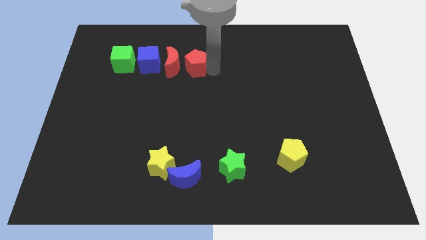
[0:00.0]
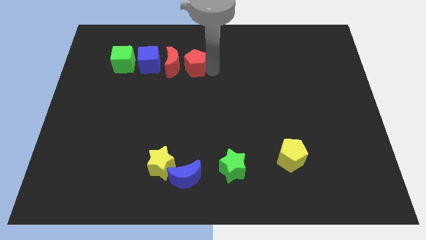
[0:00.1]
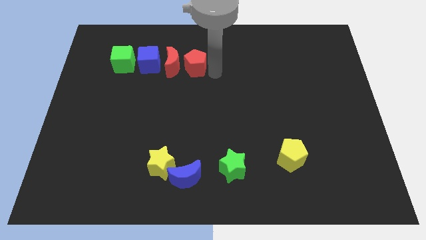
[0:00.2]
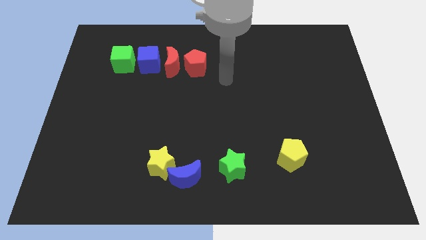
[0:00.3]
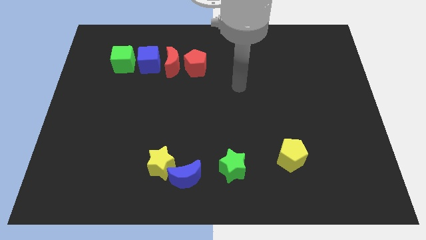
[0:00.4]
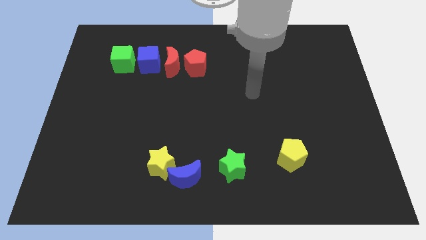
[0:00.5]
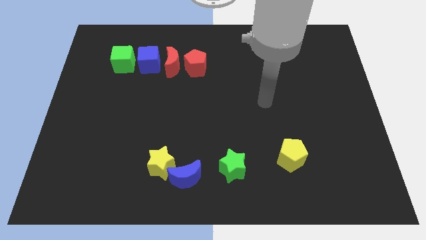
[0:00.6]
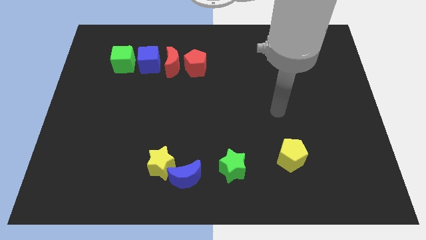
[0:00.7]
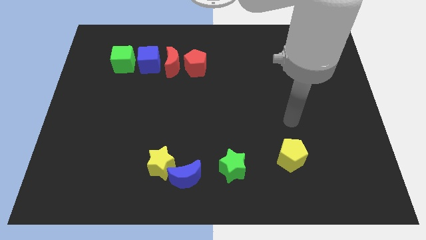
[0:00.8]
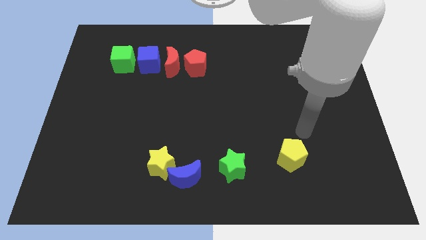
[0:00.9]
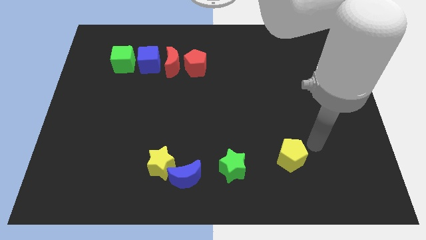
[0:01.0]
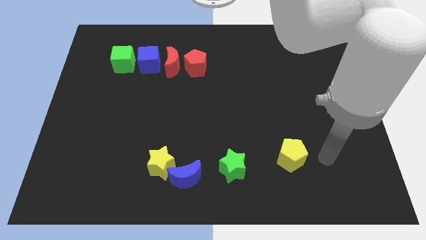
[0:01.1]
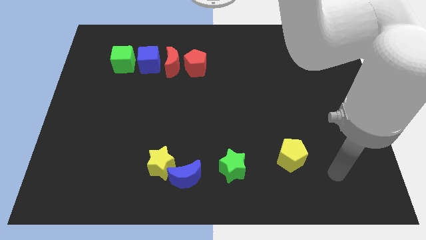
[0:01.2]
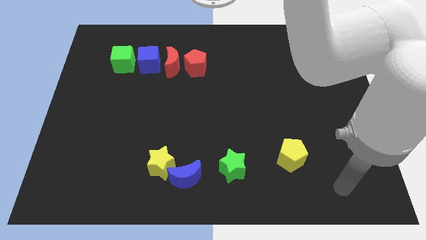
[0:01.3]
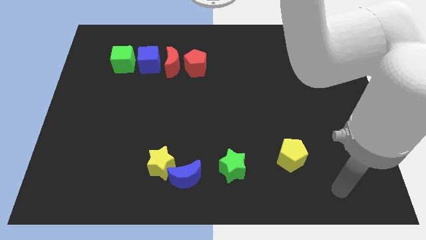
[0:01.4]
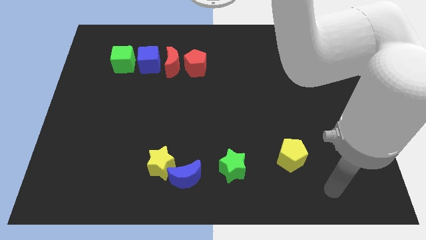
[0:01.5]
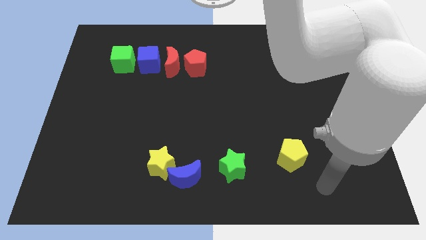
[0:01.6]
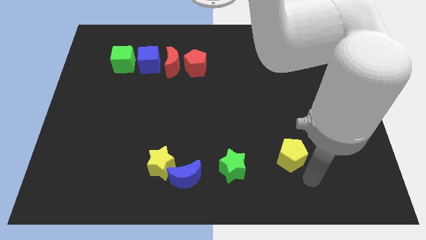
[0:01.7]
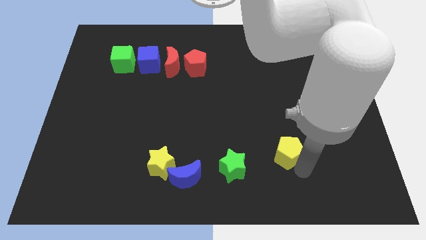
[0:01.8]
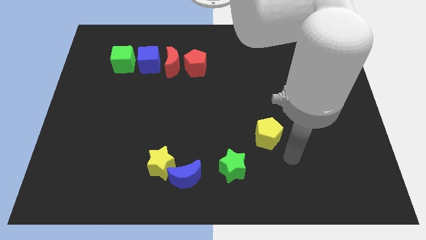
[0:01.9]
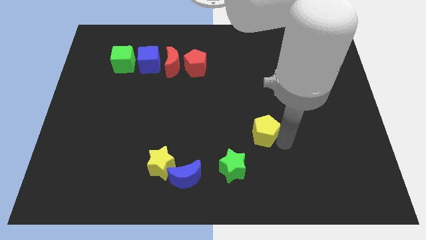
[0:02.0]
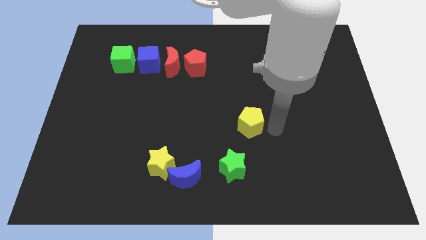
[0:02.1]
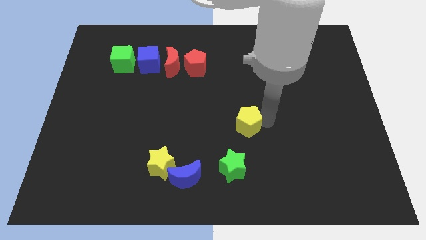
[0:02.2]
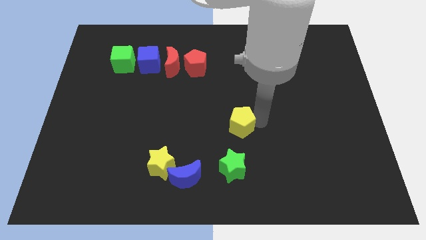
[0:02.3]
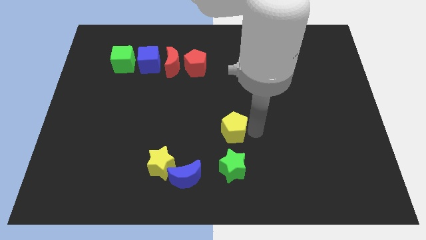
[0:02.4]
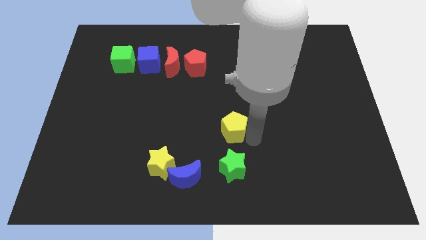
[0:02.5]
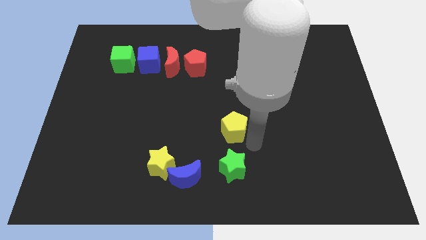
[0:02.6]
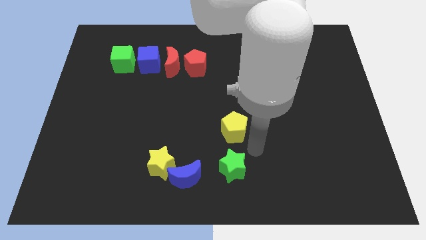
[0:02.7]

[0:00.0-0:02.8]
place yellow pentagon above green star

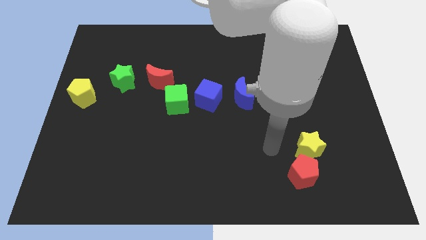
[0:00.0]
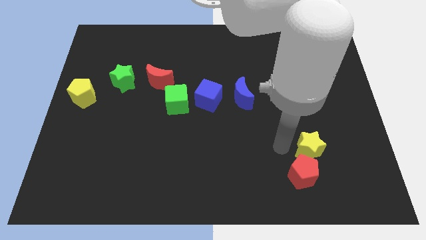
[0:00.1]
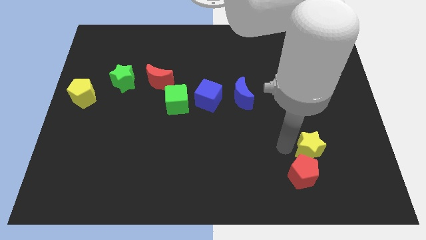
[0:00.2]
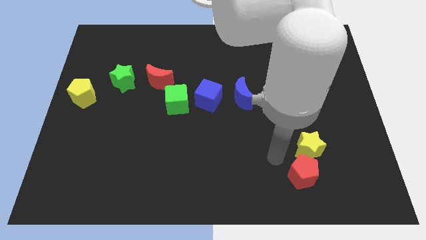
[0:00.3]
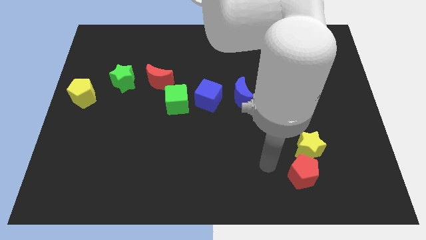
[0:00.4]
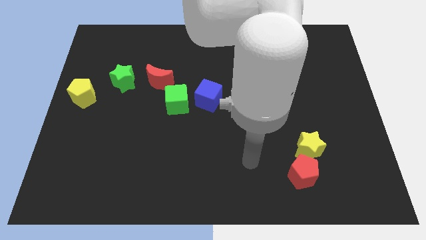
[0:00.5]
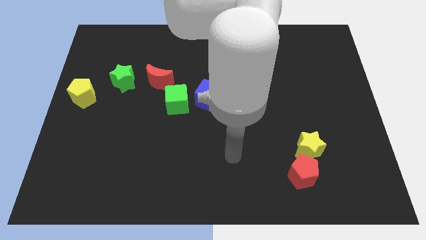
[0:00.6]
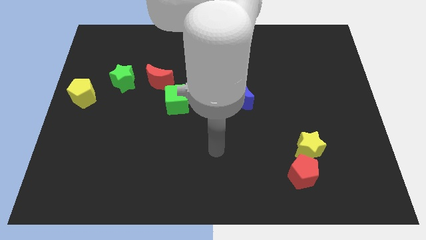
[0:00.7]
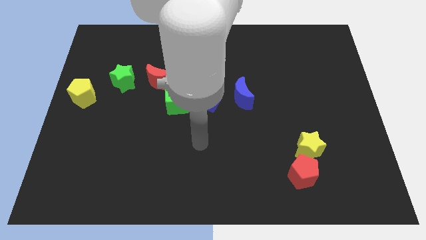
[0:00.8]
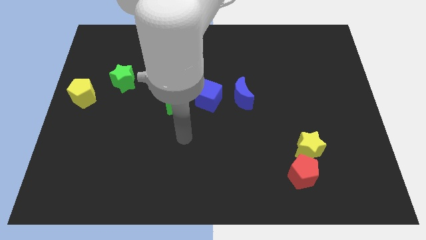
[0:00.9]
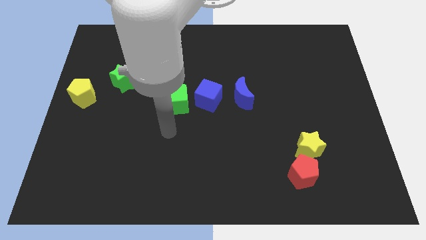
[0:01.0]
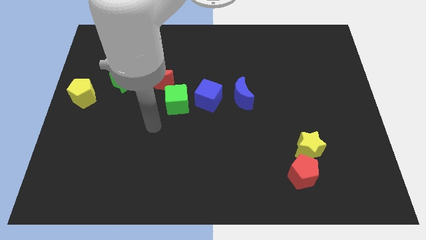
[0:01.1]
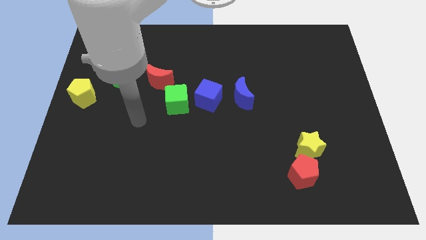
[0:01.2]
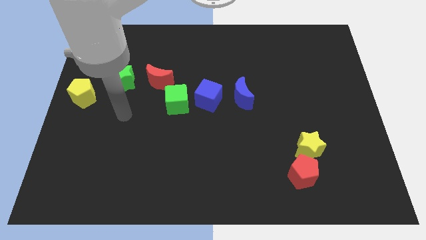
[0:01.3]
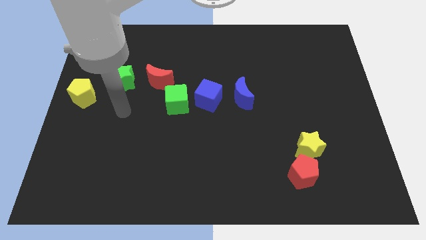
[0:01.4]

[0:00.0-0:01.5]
move your hand below the green star

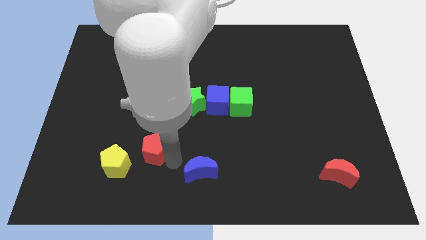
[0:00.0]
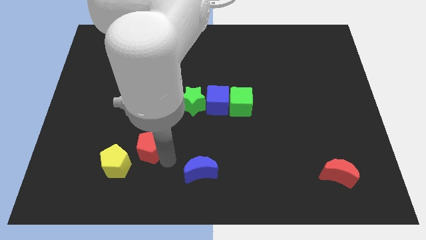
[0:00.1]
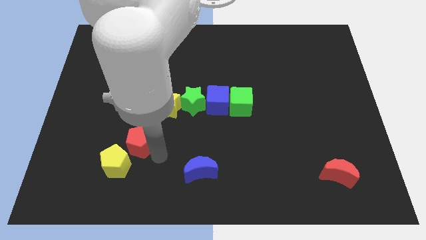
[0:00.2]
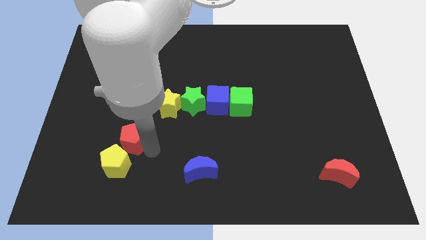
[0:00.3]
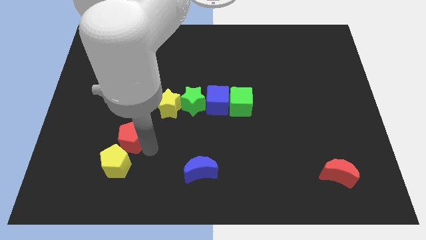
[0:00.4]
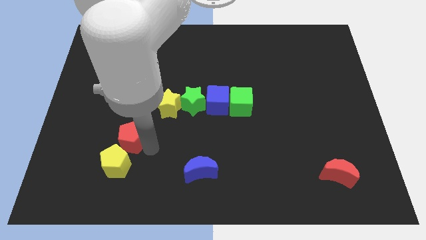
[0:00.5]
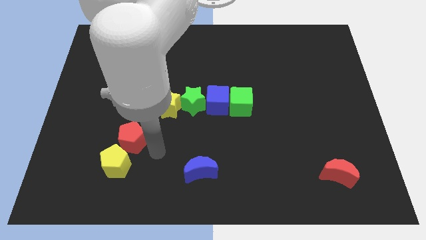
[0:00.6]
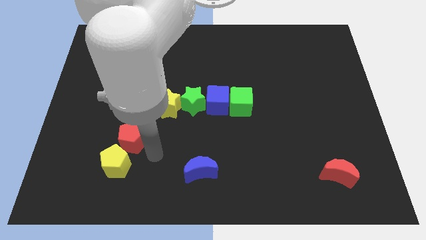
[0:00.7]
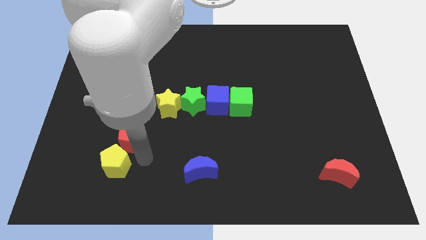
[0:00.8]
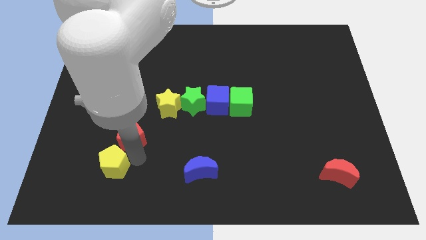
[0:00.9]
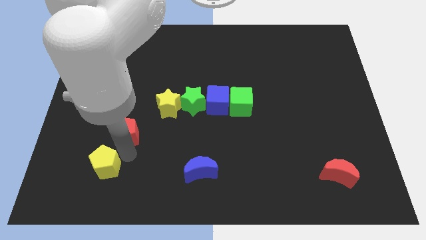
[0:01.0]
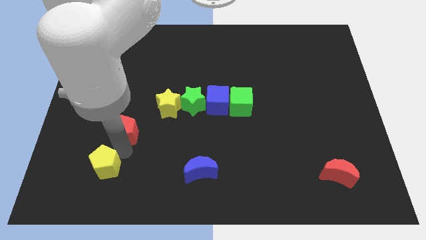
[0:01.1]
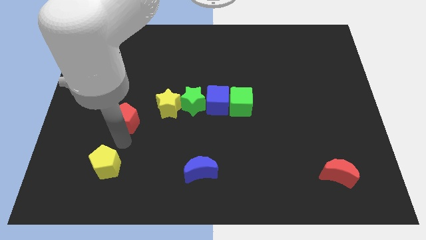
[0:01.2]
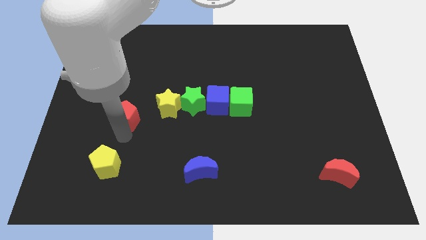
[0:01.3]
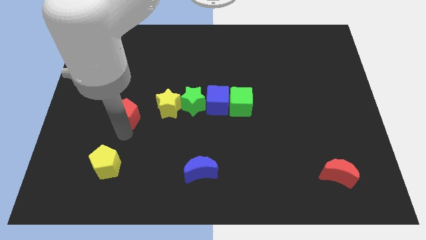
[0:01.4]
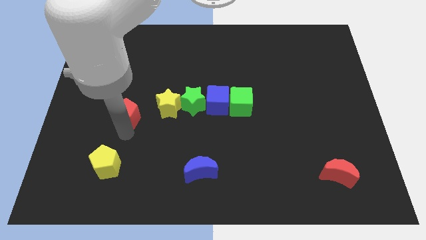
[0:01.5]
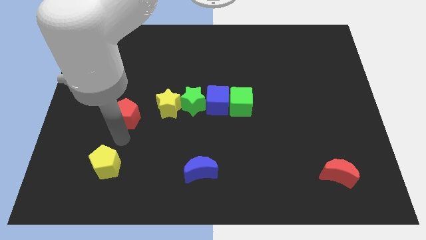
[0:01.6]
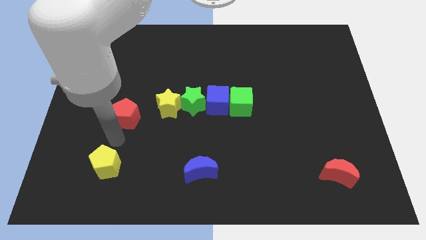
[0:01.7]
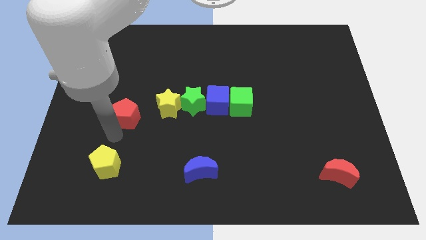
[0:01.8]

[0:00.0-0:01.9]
place red pentagon at the top of the yellow pentagon

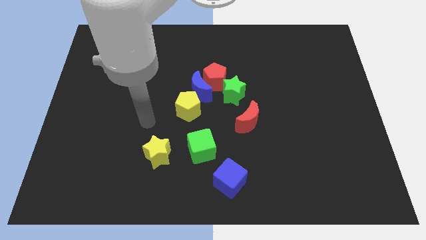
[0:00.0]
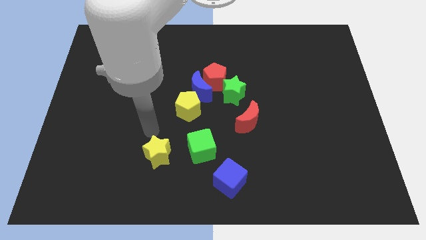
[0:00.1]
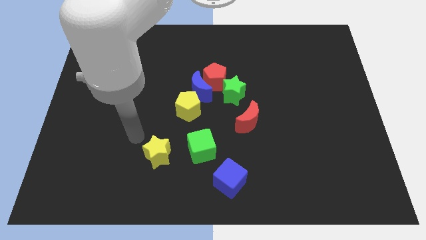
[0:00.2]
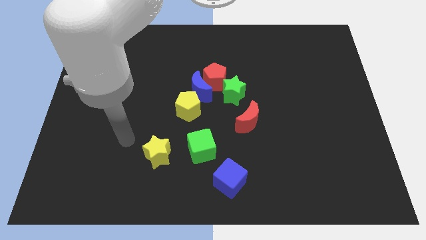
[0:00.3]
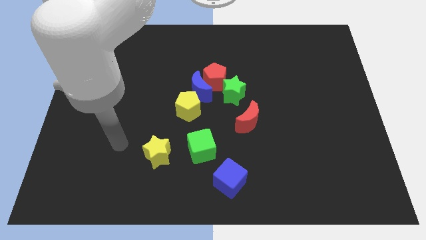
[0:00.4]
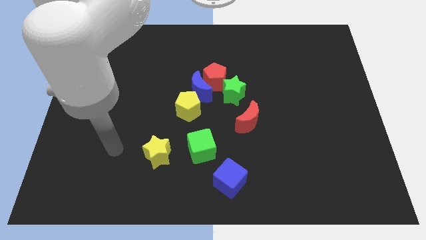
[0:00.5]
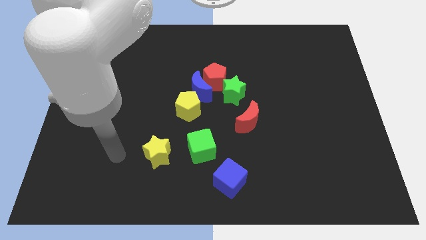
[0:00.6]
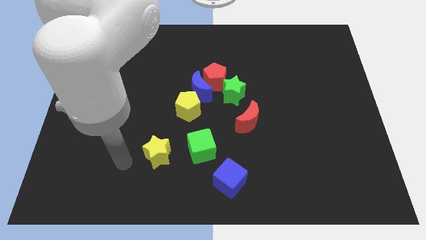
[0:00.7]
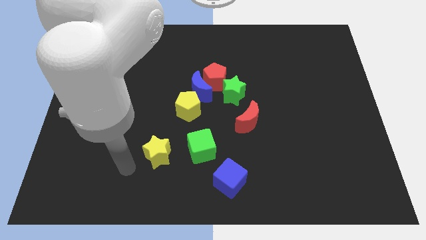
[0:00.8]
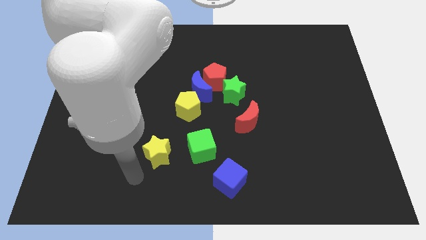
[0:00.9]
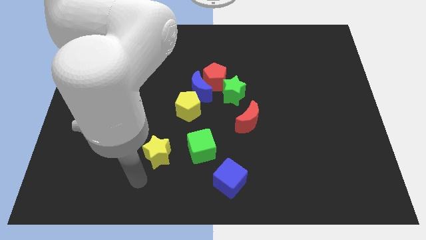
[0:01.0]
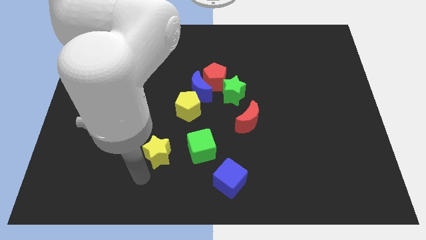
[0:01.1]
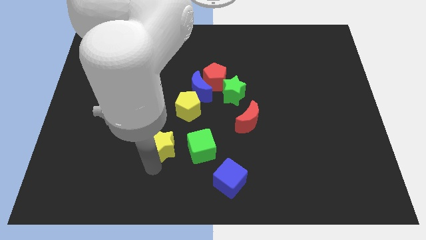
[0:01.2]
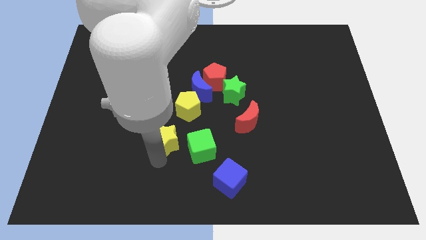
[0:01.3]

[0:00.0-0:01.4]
slightly push the yellow star upwards

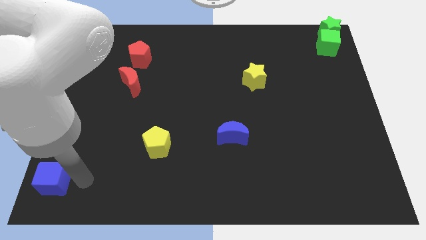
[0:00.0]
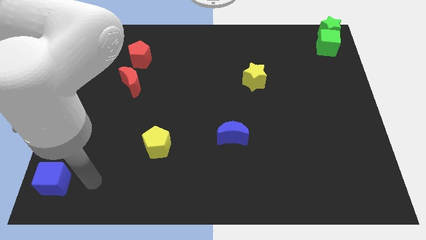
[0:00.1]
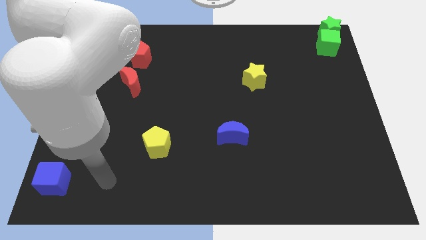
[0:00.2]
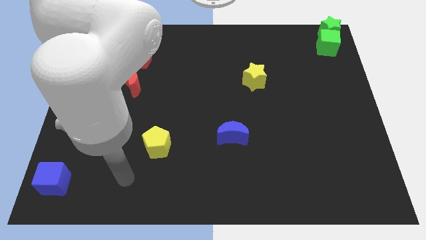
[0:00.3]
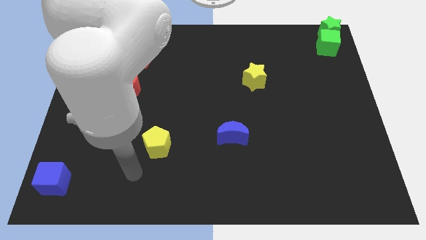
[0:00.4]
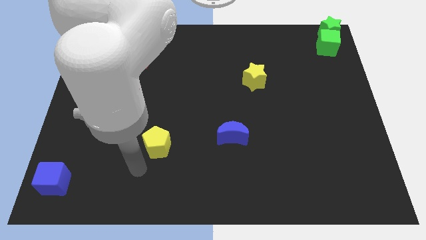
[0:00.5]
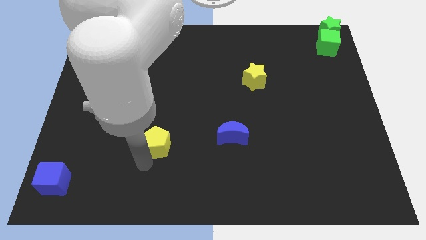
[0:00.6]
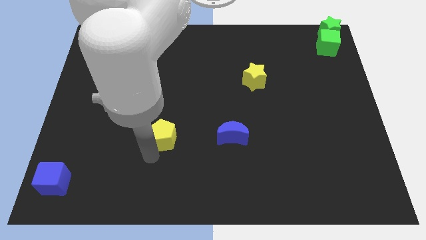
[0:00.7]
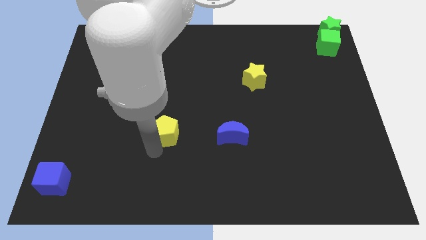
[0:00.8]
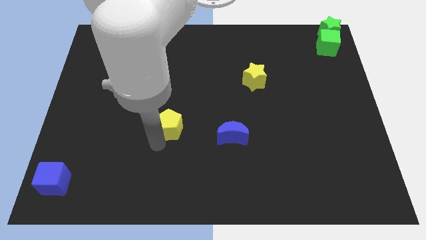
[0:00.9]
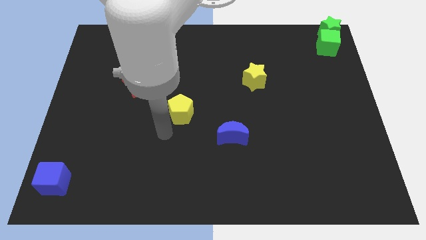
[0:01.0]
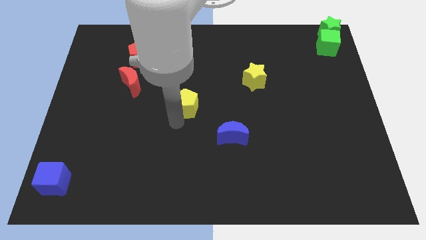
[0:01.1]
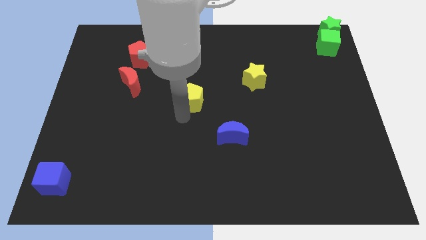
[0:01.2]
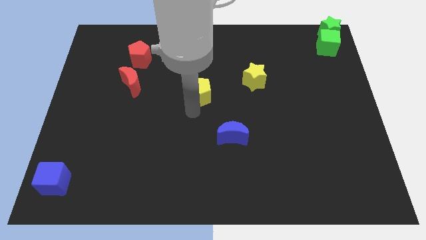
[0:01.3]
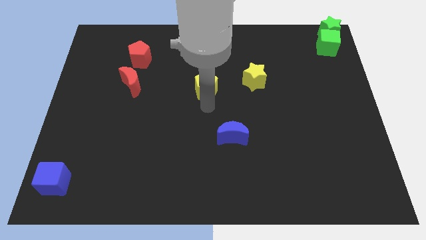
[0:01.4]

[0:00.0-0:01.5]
push the yellow pentagon to the top left of the blue crescent
